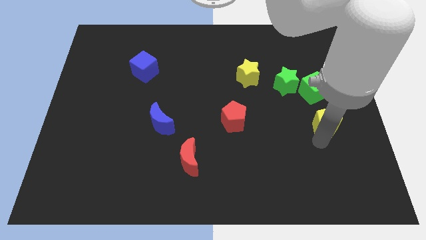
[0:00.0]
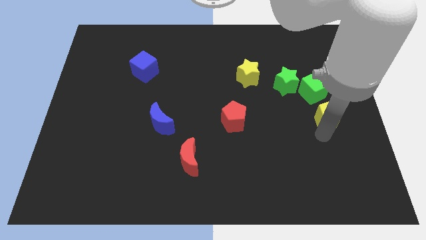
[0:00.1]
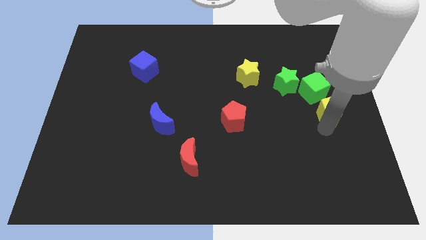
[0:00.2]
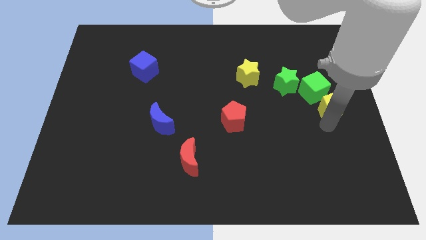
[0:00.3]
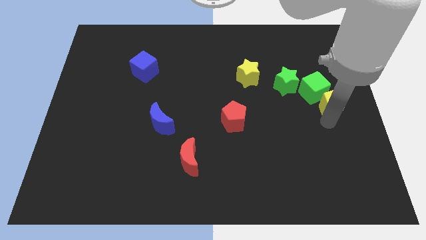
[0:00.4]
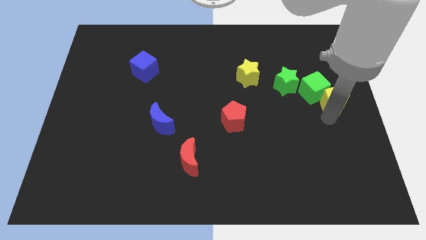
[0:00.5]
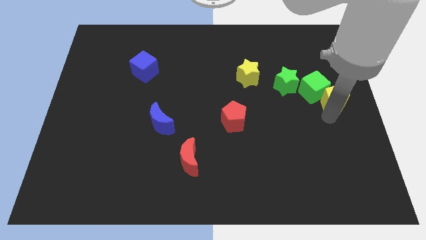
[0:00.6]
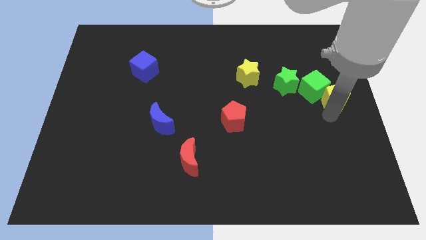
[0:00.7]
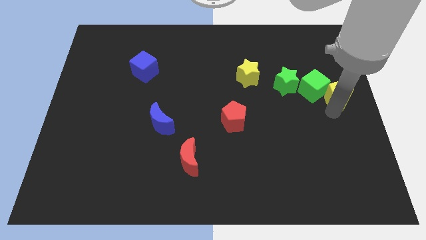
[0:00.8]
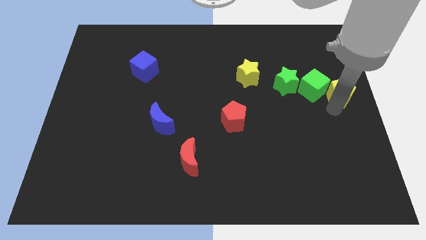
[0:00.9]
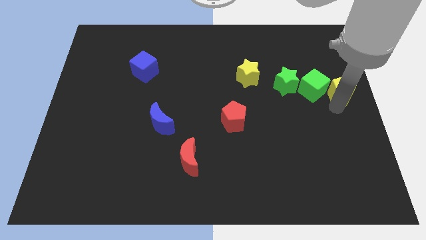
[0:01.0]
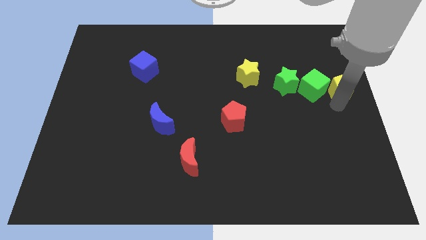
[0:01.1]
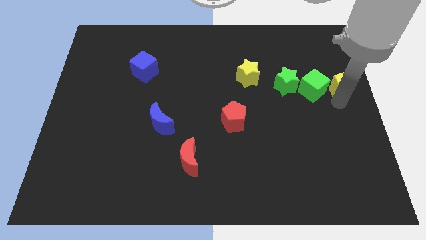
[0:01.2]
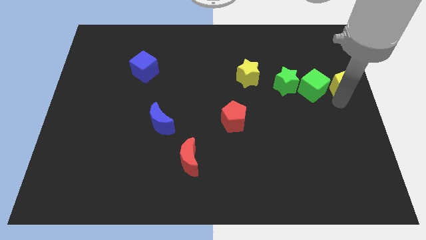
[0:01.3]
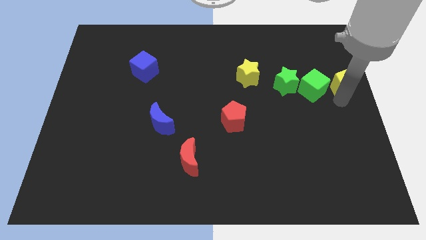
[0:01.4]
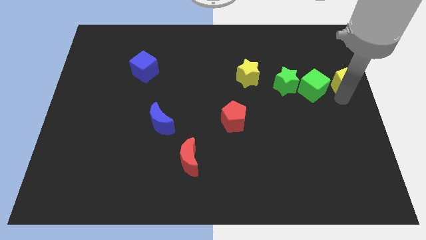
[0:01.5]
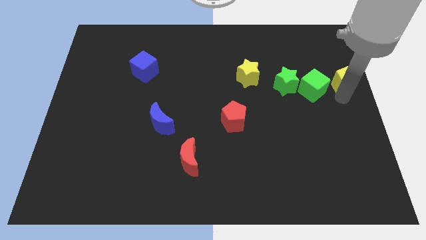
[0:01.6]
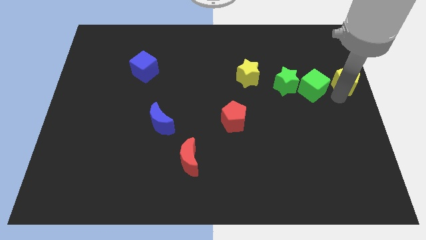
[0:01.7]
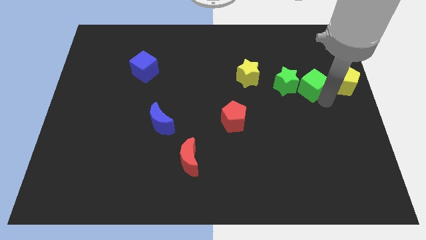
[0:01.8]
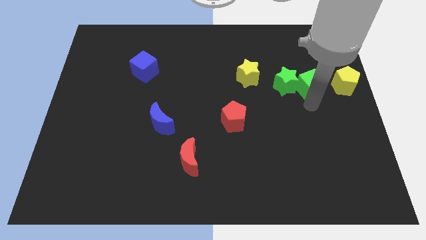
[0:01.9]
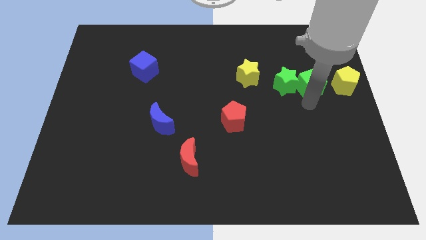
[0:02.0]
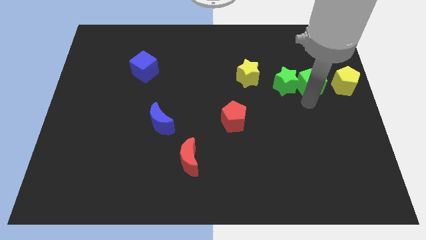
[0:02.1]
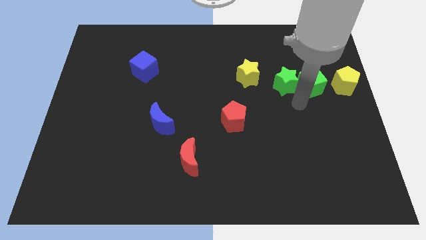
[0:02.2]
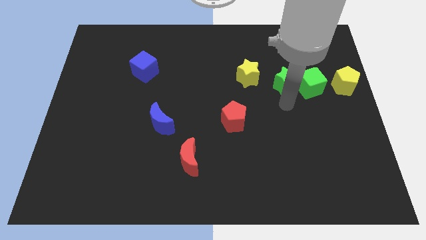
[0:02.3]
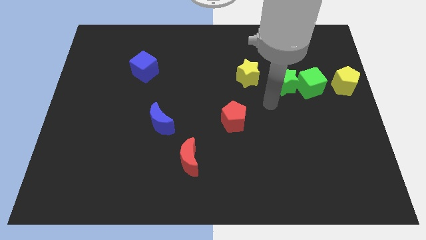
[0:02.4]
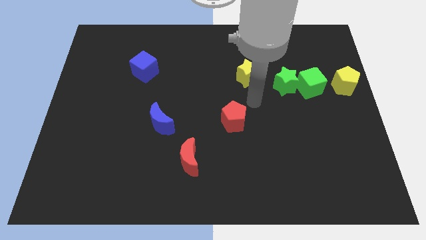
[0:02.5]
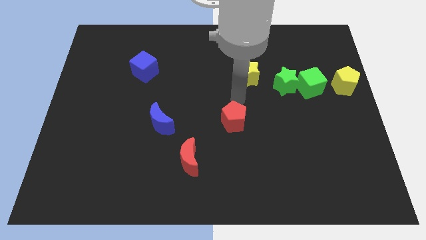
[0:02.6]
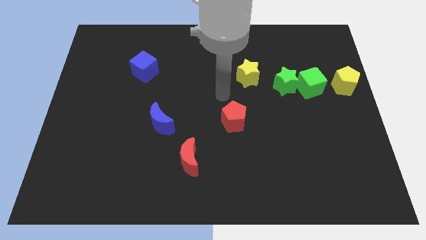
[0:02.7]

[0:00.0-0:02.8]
slightly move the green cube up

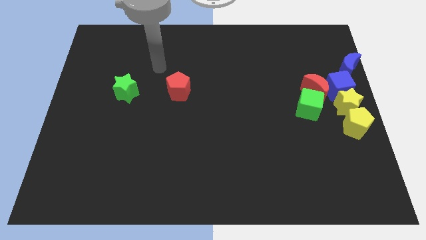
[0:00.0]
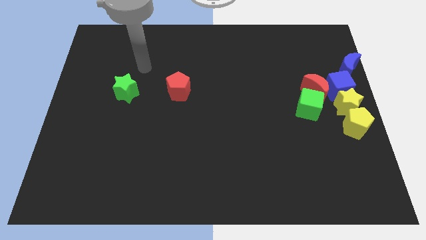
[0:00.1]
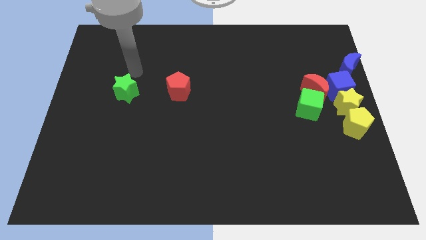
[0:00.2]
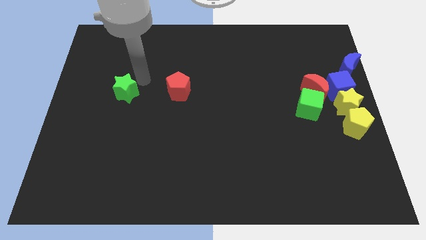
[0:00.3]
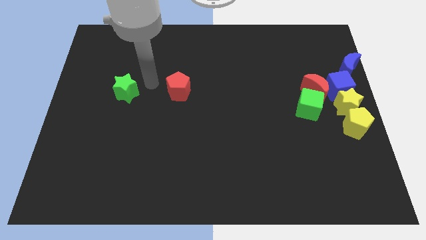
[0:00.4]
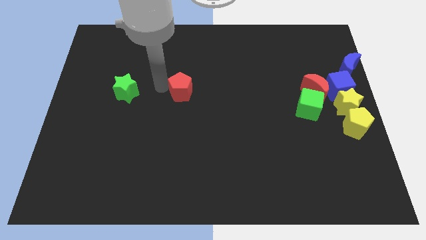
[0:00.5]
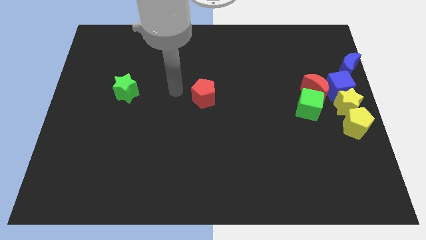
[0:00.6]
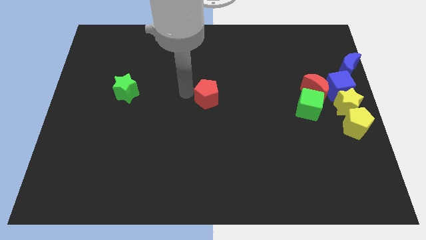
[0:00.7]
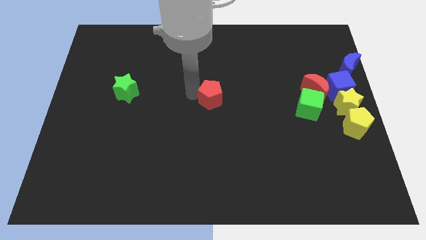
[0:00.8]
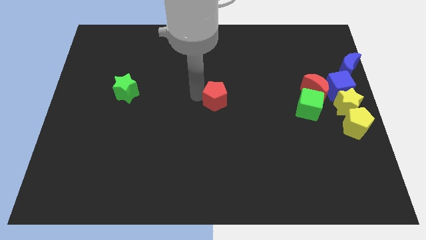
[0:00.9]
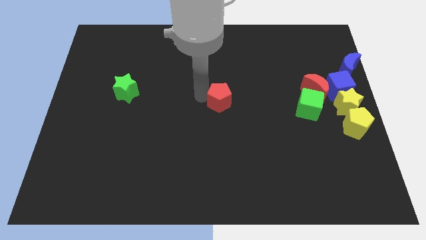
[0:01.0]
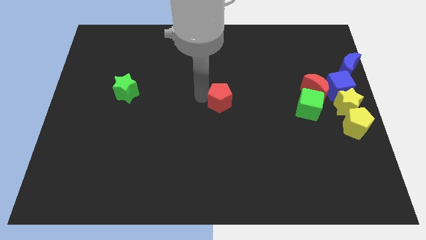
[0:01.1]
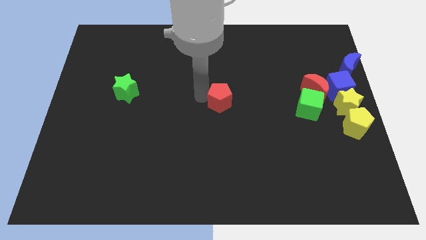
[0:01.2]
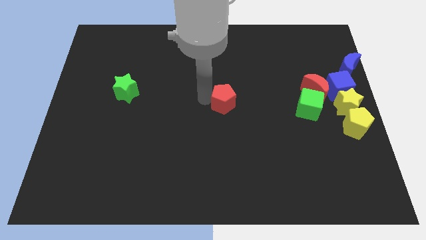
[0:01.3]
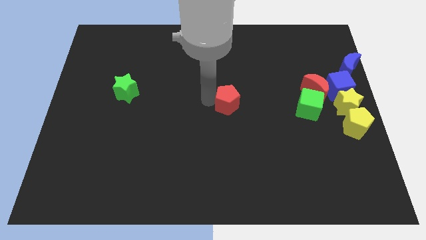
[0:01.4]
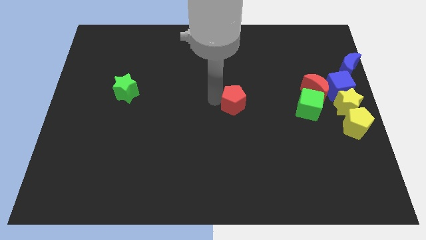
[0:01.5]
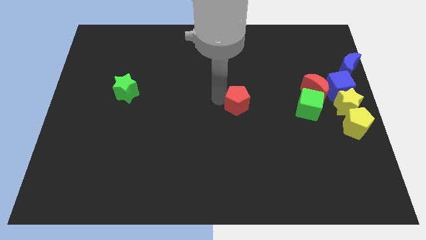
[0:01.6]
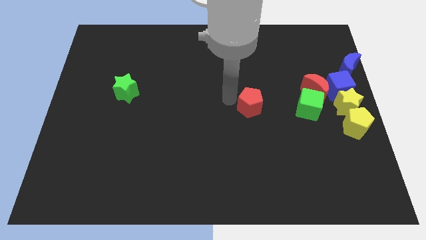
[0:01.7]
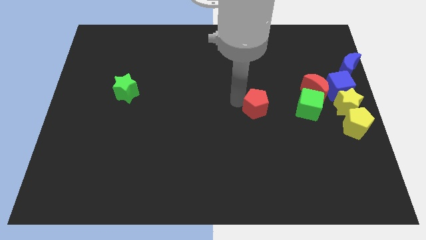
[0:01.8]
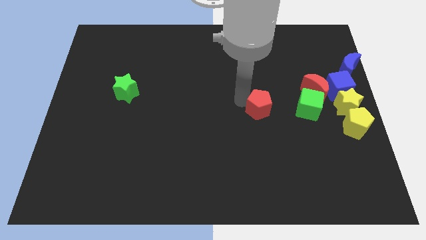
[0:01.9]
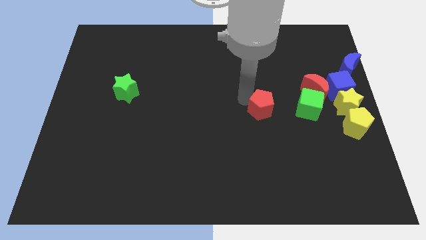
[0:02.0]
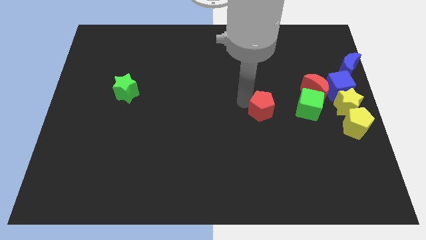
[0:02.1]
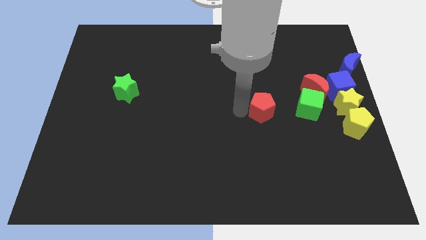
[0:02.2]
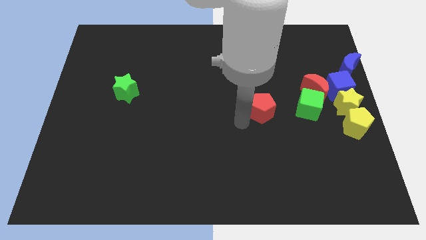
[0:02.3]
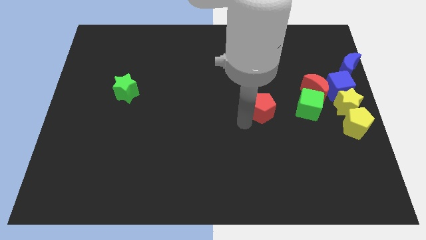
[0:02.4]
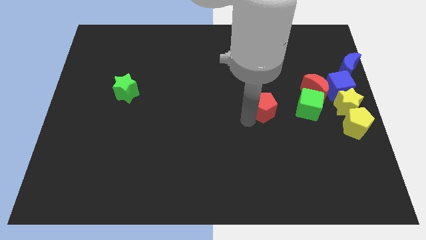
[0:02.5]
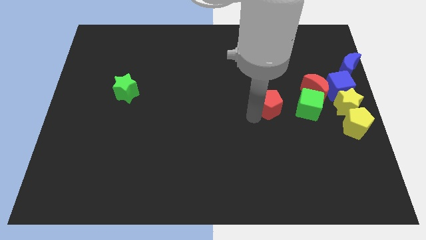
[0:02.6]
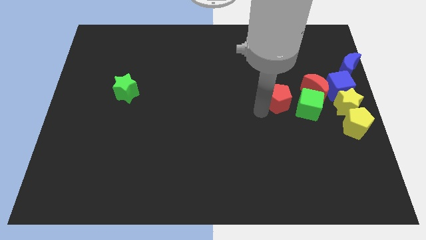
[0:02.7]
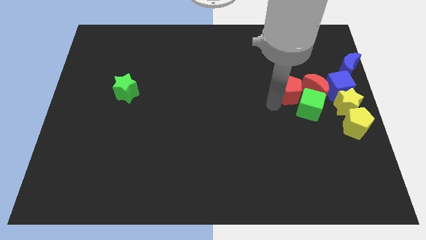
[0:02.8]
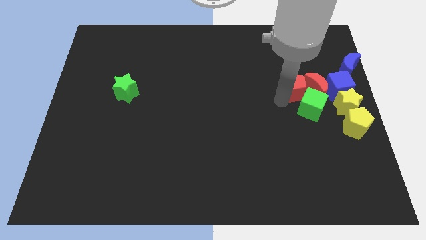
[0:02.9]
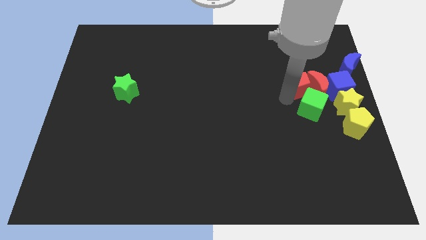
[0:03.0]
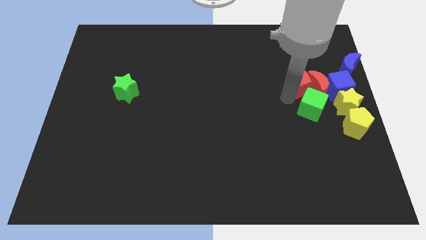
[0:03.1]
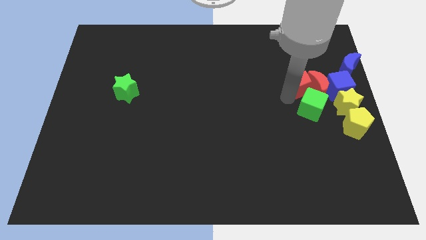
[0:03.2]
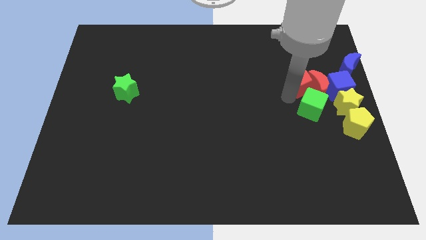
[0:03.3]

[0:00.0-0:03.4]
push the red pentagon into the red crescent

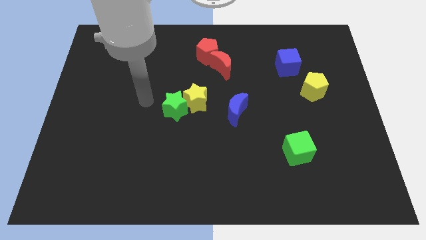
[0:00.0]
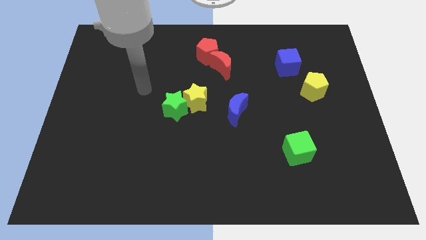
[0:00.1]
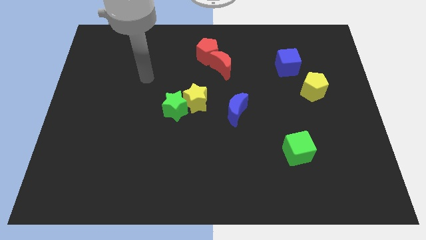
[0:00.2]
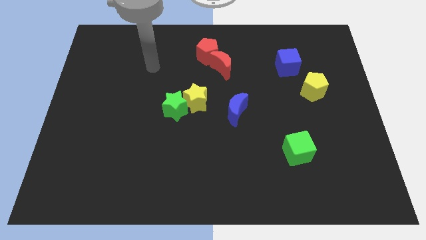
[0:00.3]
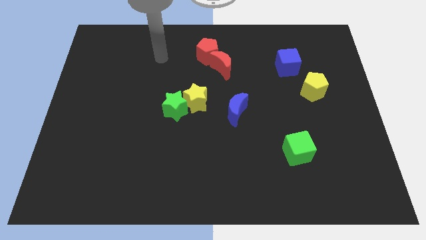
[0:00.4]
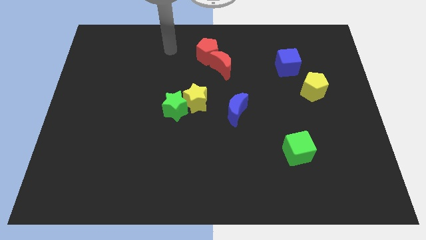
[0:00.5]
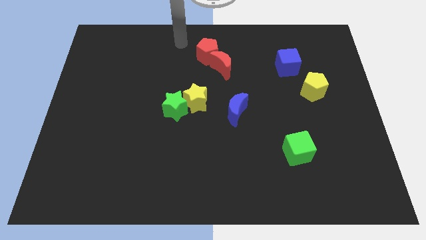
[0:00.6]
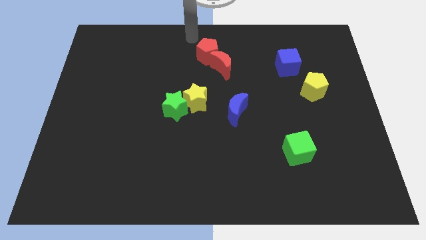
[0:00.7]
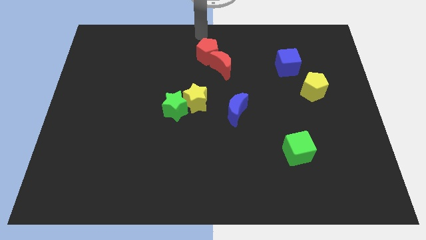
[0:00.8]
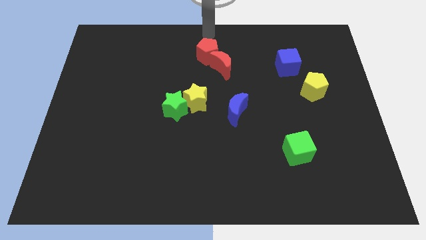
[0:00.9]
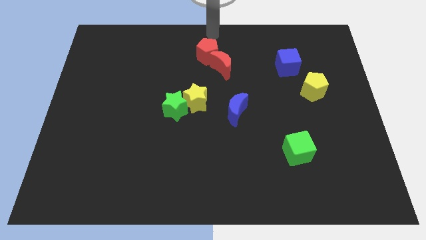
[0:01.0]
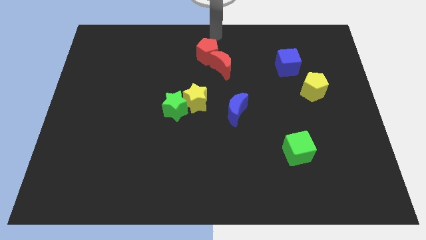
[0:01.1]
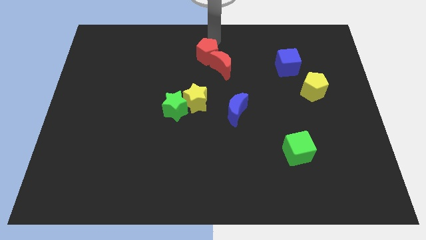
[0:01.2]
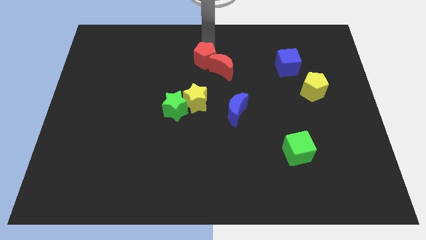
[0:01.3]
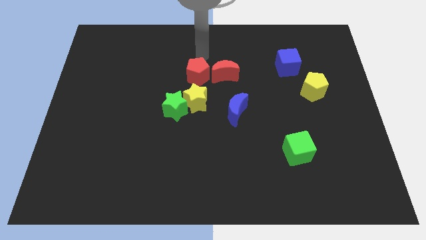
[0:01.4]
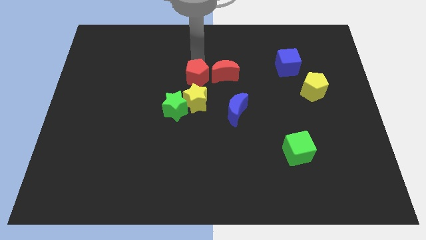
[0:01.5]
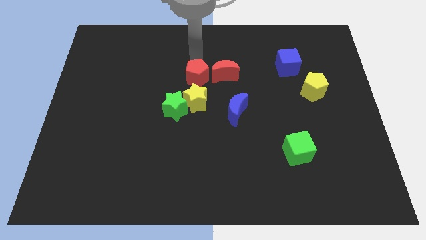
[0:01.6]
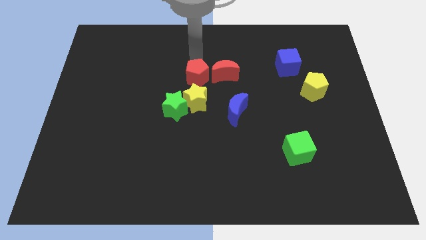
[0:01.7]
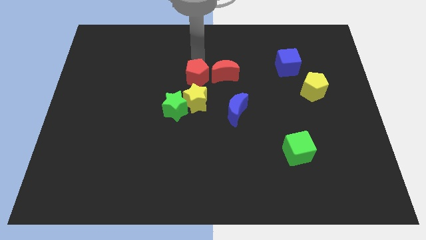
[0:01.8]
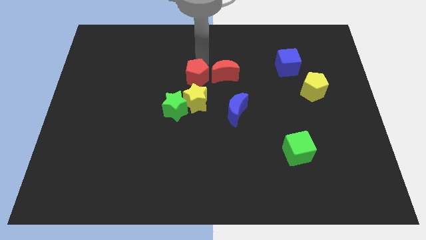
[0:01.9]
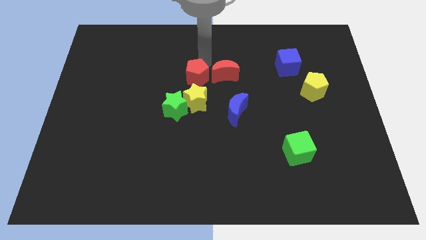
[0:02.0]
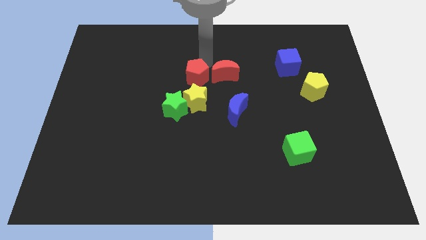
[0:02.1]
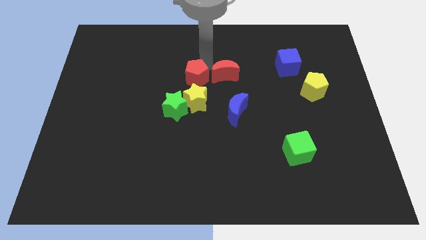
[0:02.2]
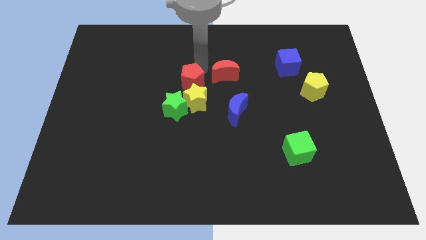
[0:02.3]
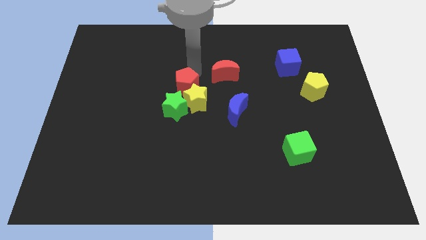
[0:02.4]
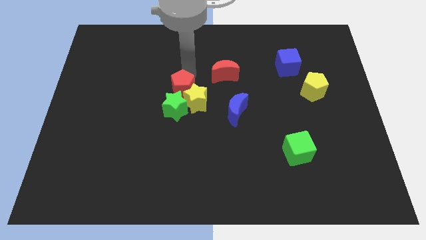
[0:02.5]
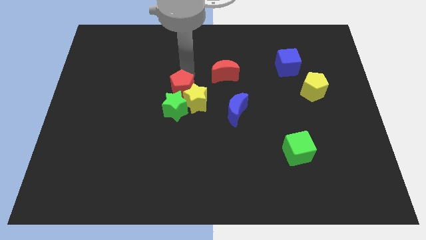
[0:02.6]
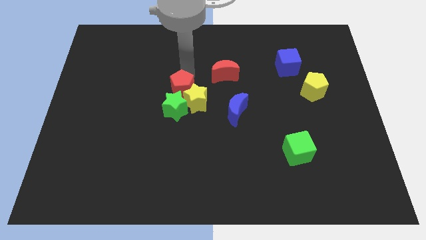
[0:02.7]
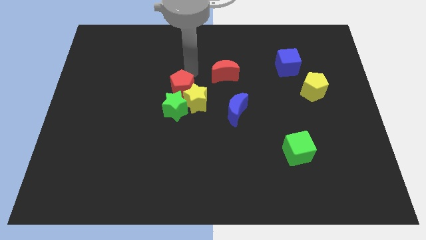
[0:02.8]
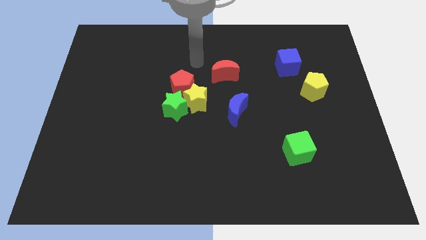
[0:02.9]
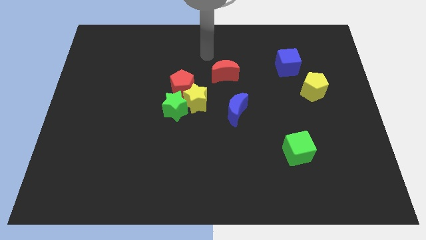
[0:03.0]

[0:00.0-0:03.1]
move red pentagon near to yellow star
